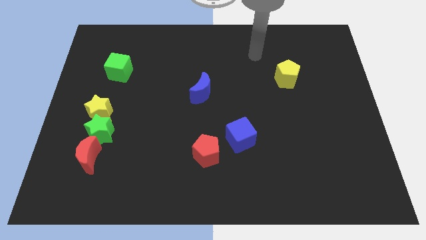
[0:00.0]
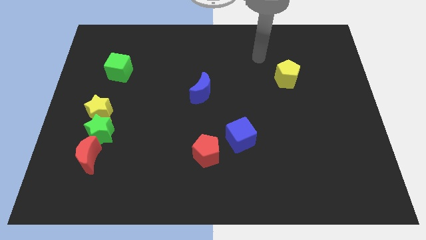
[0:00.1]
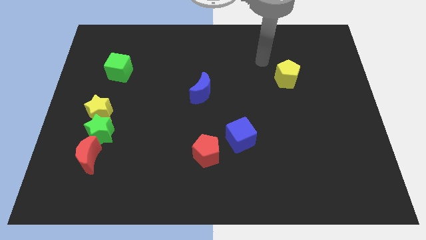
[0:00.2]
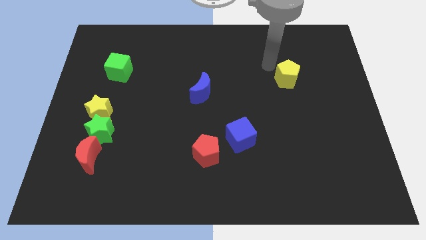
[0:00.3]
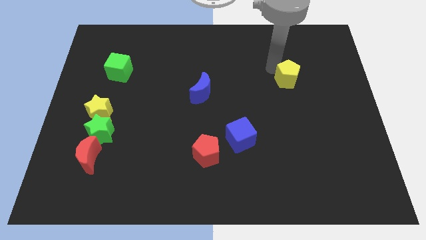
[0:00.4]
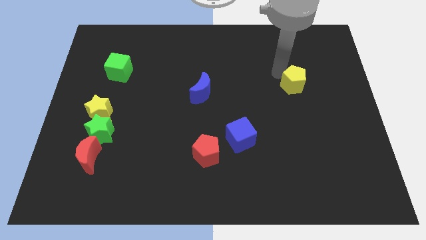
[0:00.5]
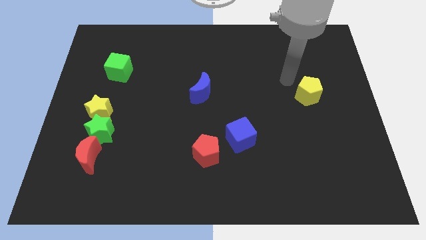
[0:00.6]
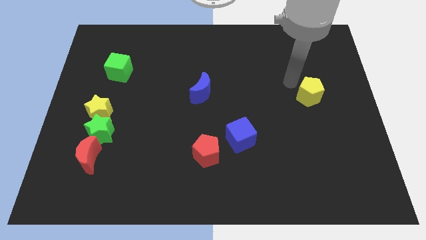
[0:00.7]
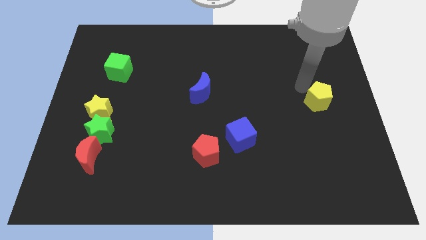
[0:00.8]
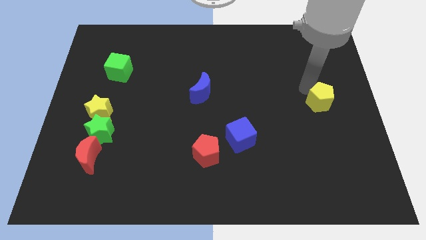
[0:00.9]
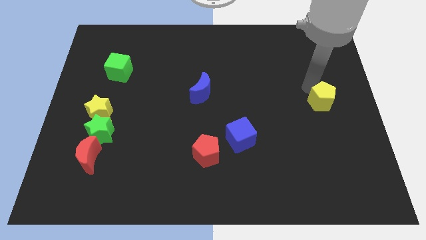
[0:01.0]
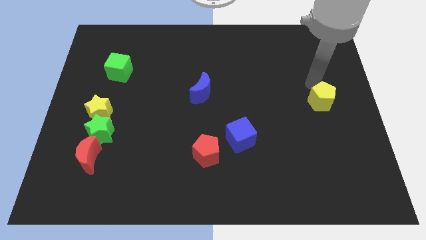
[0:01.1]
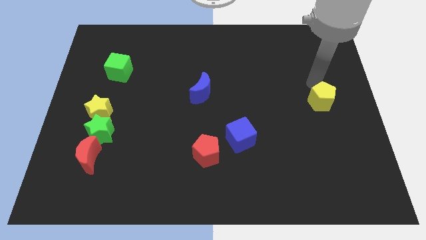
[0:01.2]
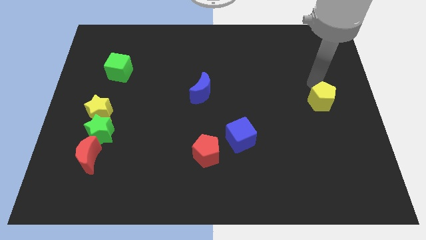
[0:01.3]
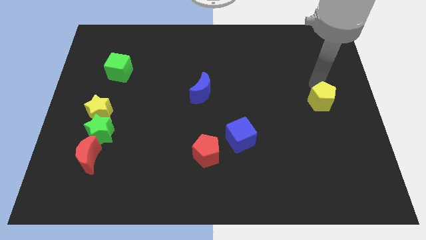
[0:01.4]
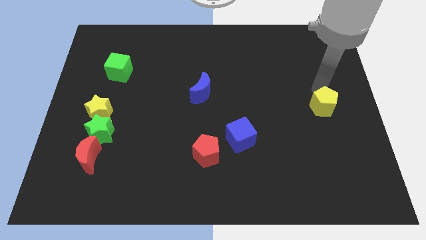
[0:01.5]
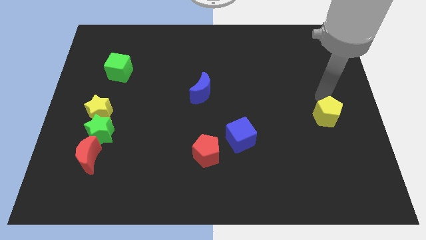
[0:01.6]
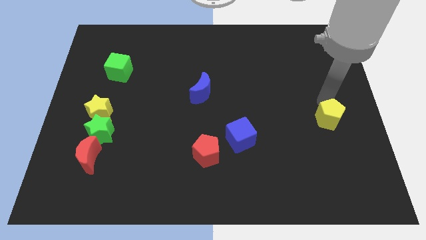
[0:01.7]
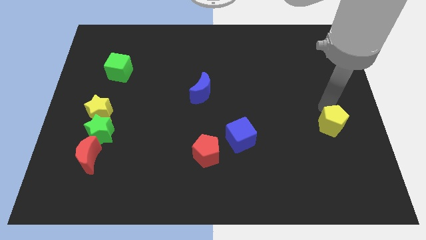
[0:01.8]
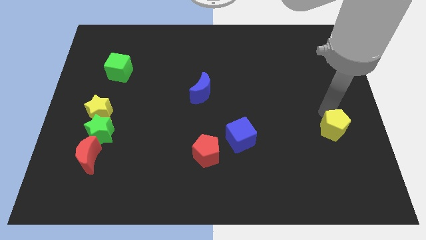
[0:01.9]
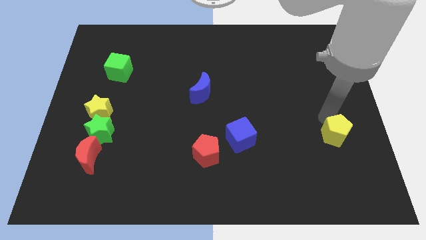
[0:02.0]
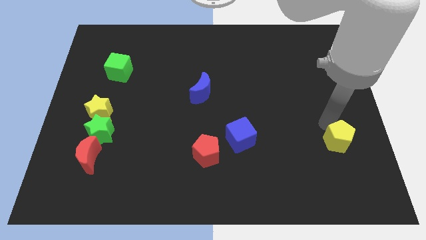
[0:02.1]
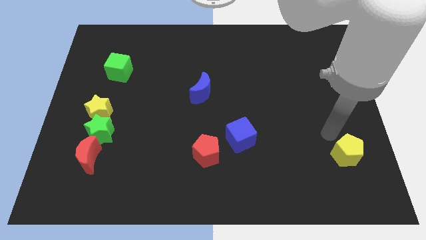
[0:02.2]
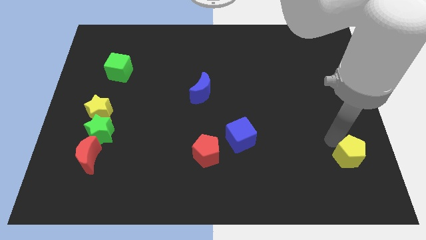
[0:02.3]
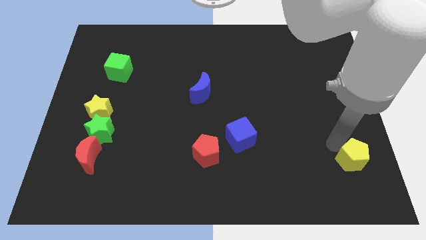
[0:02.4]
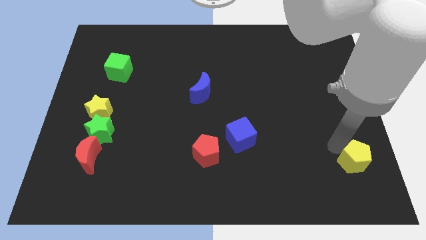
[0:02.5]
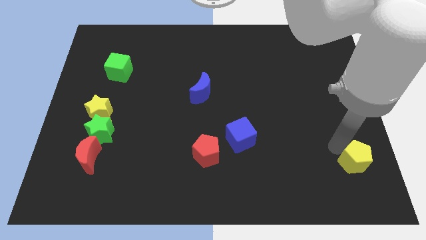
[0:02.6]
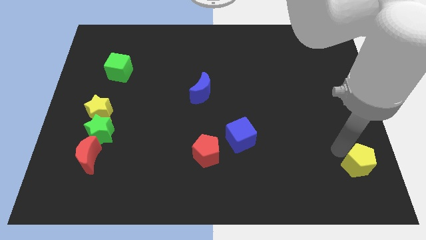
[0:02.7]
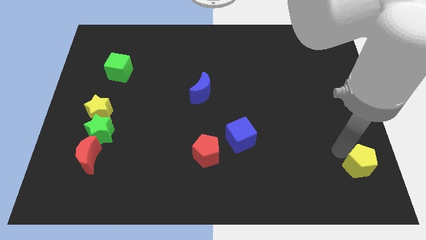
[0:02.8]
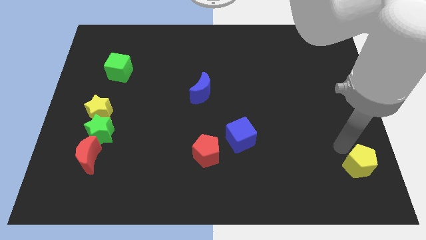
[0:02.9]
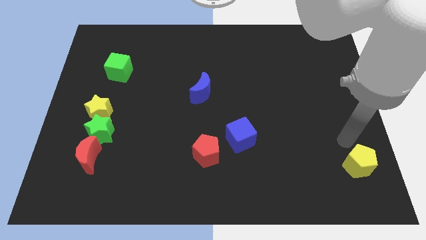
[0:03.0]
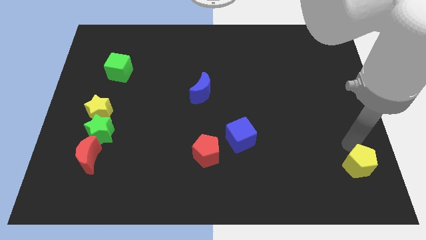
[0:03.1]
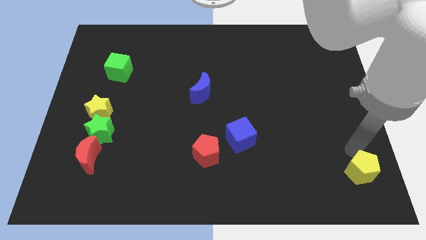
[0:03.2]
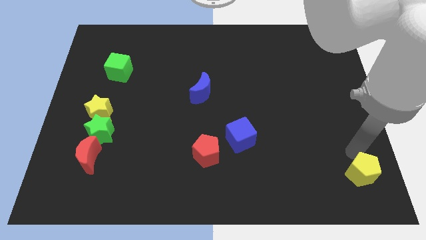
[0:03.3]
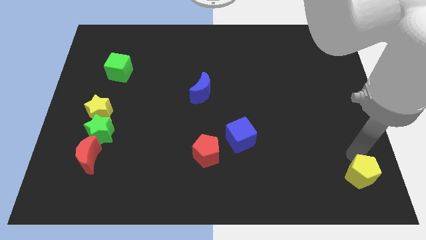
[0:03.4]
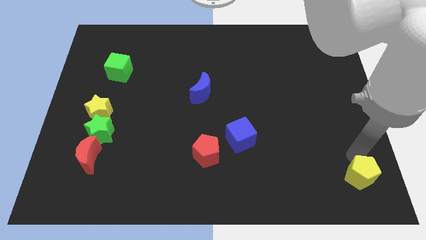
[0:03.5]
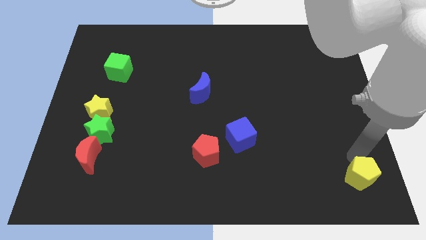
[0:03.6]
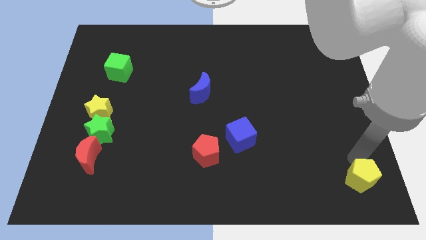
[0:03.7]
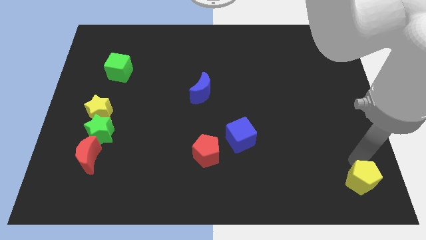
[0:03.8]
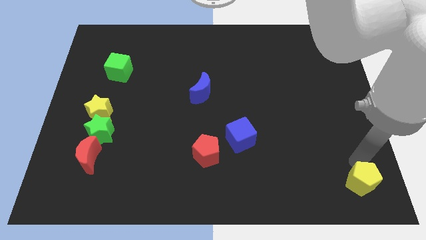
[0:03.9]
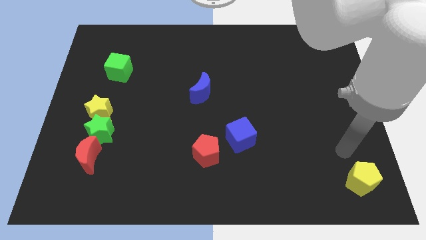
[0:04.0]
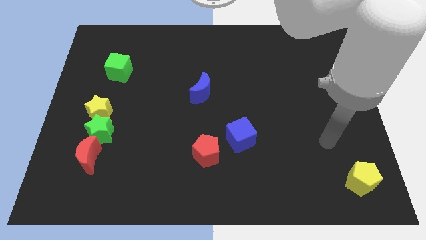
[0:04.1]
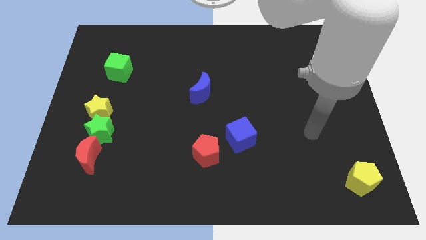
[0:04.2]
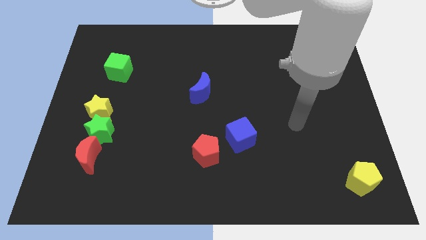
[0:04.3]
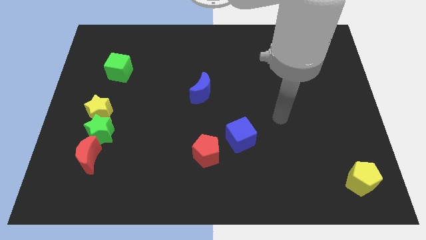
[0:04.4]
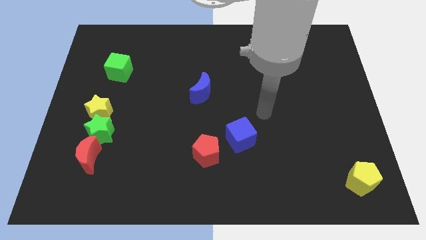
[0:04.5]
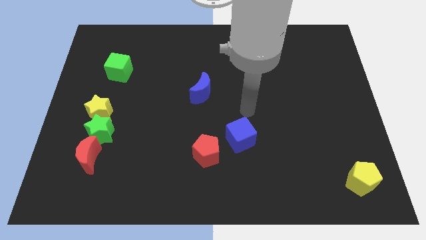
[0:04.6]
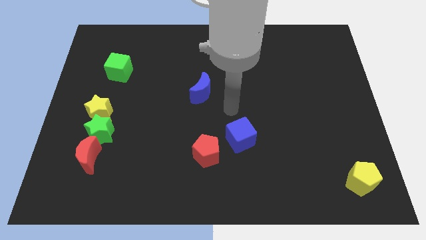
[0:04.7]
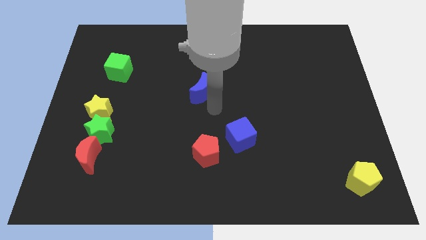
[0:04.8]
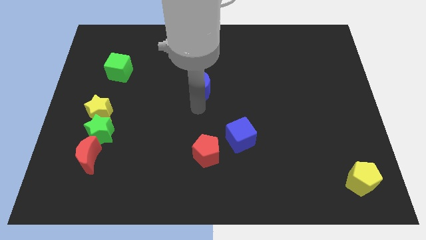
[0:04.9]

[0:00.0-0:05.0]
move the yellow pentagon to the bottom right

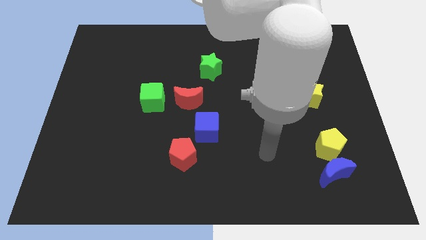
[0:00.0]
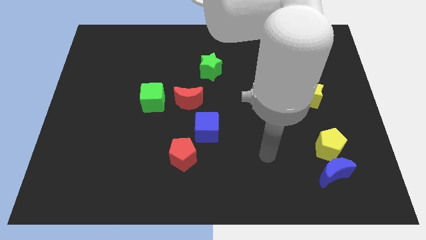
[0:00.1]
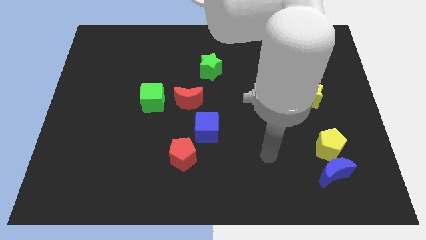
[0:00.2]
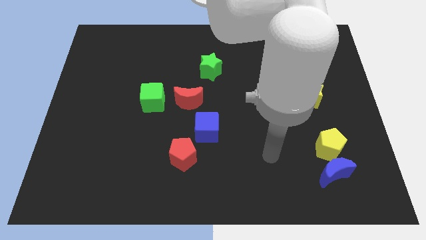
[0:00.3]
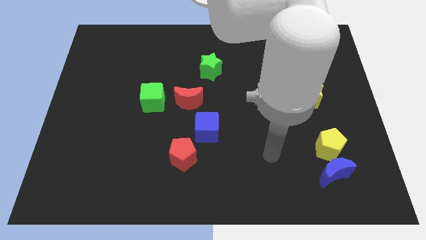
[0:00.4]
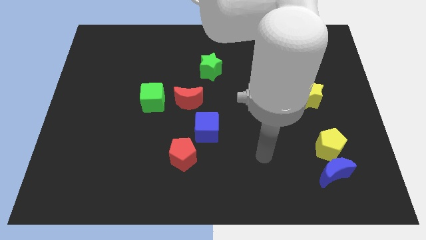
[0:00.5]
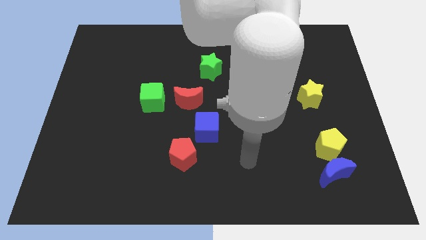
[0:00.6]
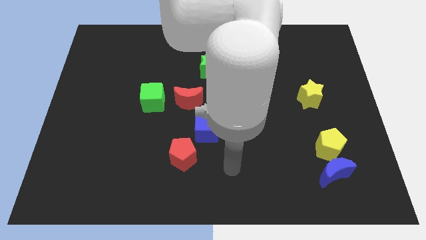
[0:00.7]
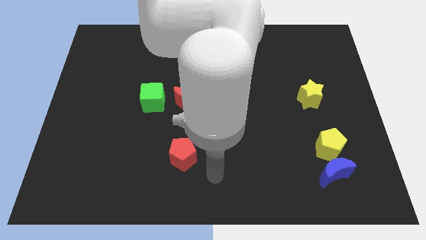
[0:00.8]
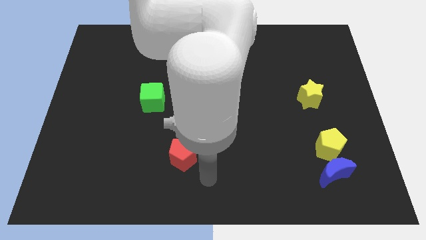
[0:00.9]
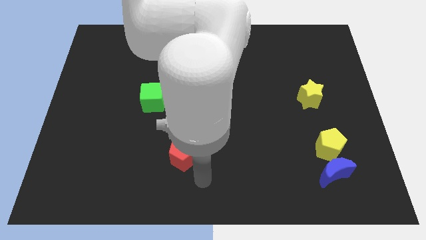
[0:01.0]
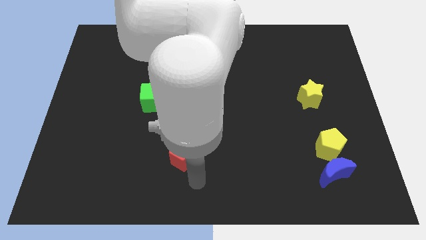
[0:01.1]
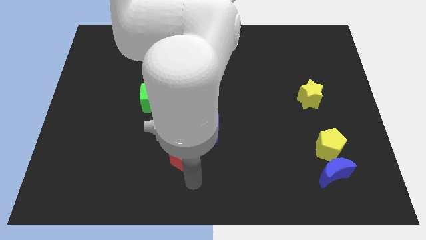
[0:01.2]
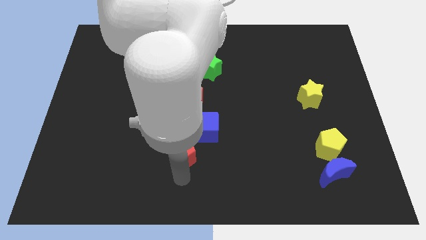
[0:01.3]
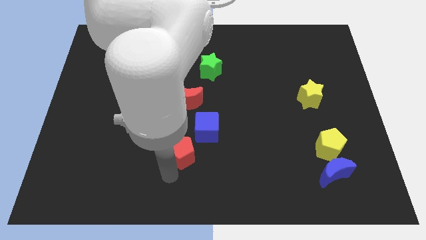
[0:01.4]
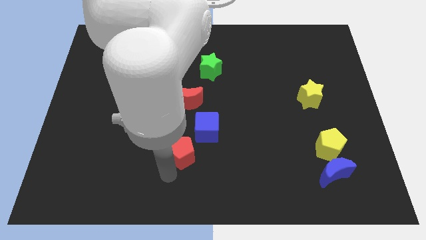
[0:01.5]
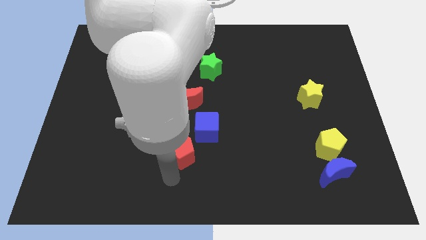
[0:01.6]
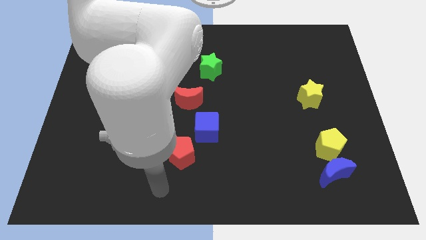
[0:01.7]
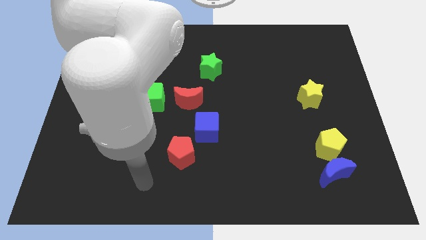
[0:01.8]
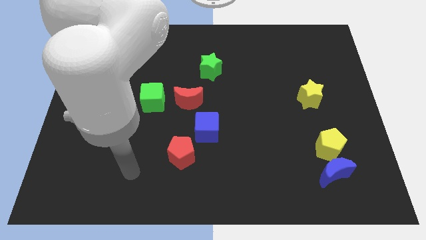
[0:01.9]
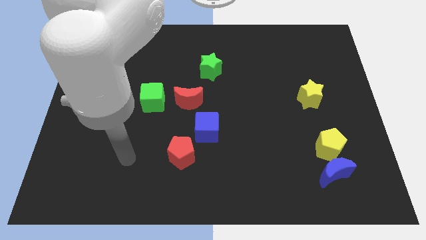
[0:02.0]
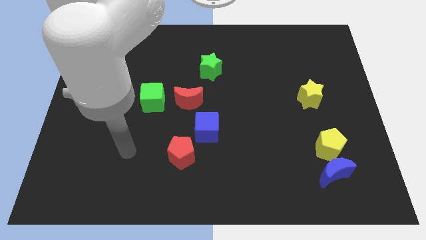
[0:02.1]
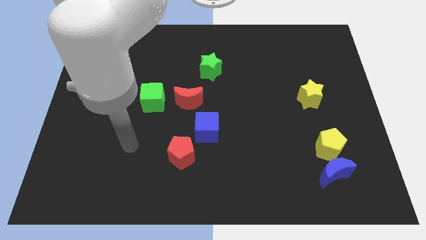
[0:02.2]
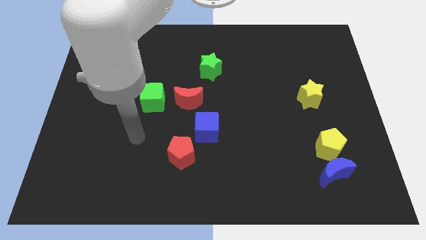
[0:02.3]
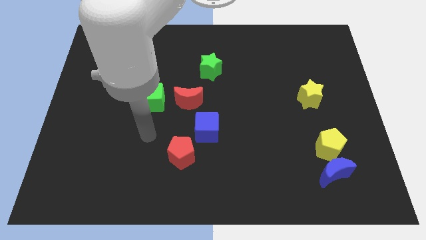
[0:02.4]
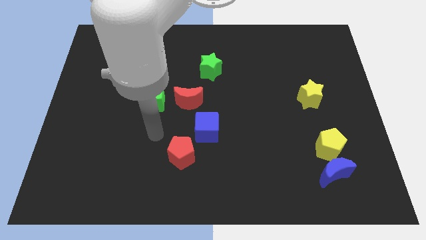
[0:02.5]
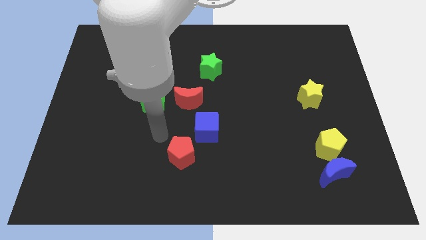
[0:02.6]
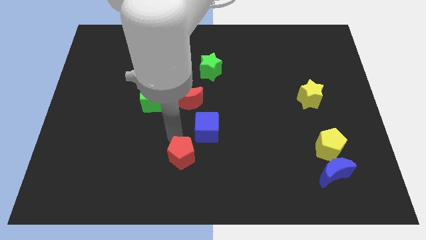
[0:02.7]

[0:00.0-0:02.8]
move the arm to the top left of red pentagon

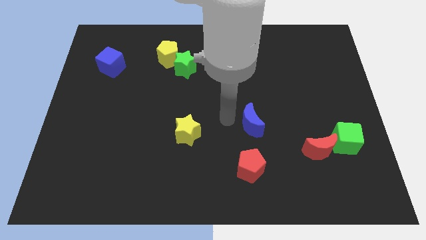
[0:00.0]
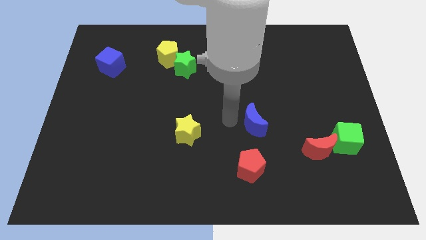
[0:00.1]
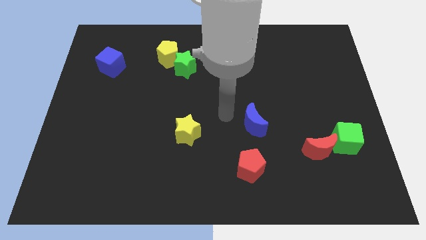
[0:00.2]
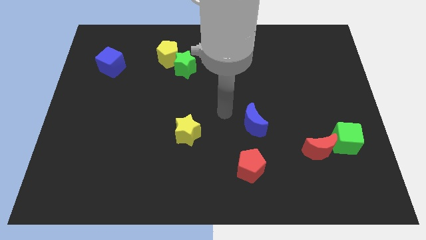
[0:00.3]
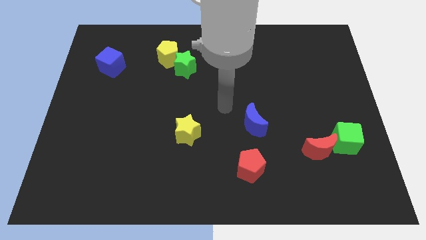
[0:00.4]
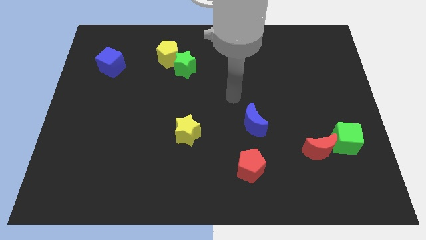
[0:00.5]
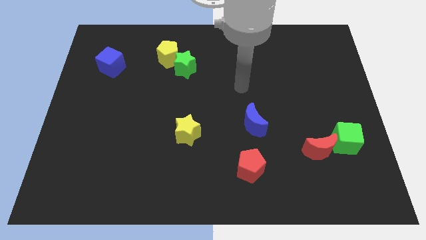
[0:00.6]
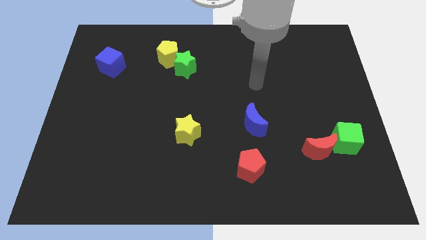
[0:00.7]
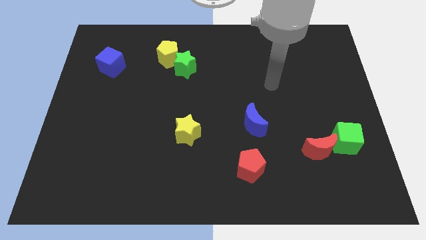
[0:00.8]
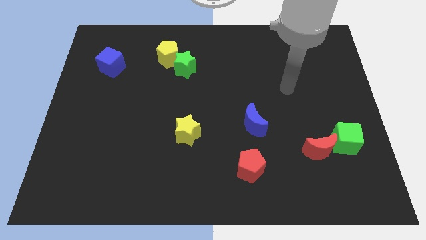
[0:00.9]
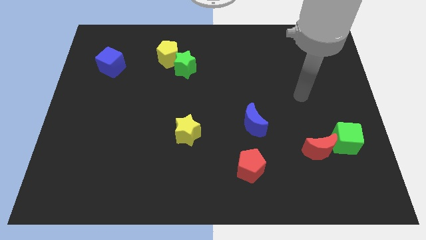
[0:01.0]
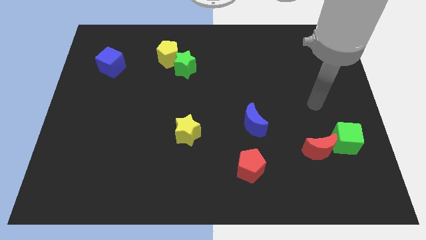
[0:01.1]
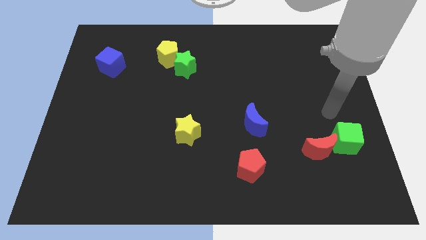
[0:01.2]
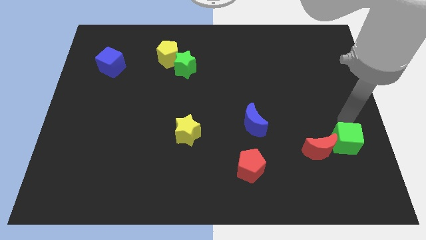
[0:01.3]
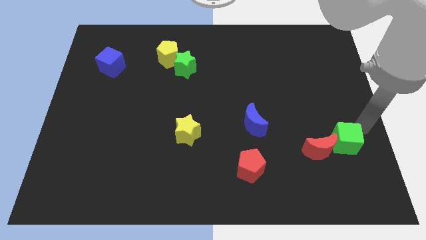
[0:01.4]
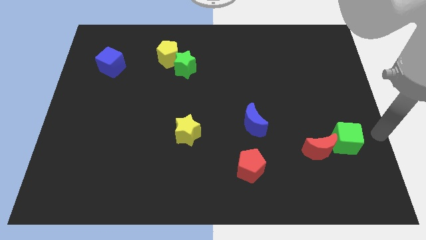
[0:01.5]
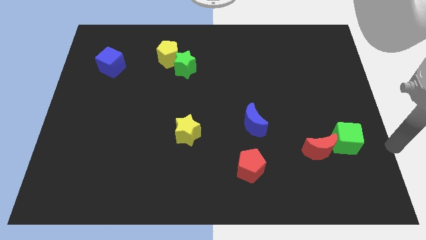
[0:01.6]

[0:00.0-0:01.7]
move your arm to the left of the green cube
